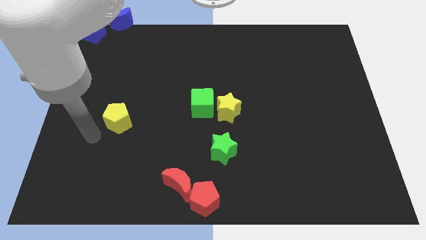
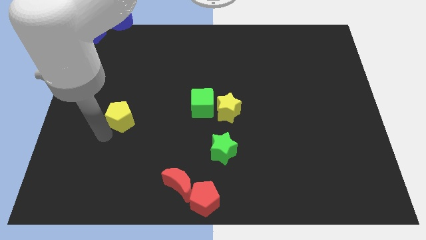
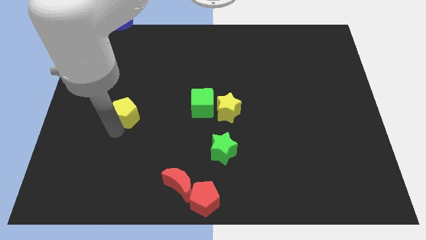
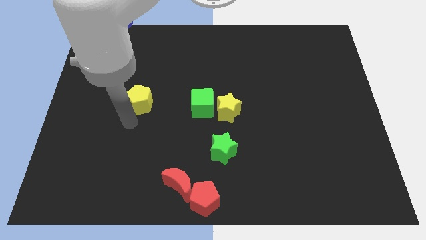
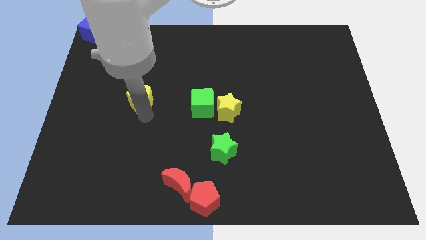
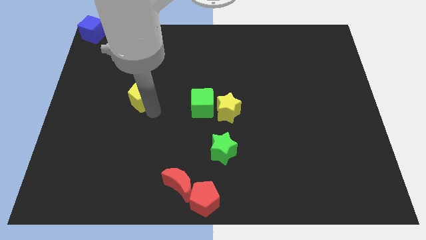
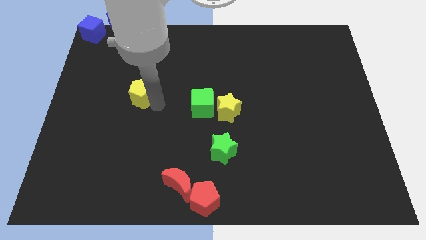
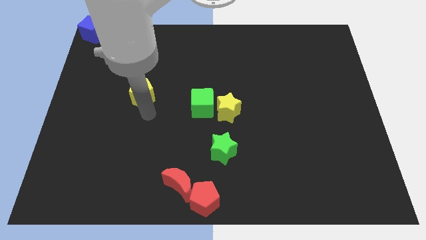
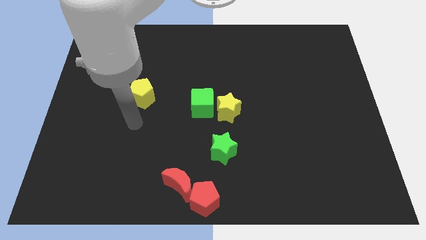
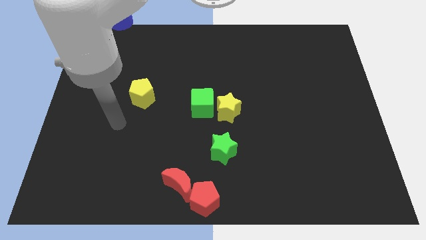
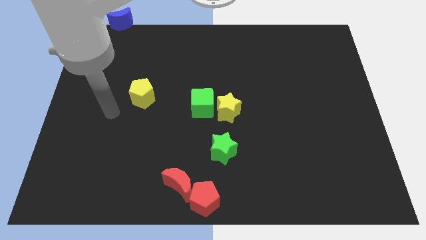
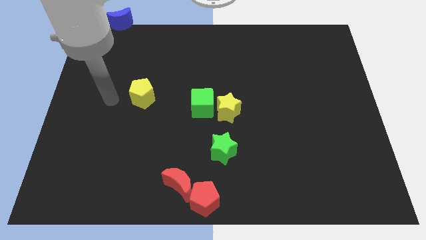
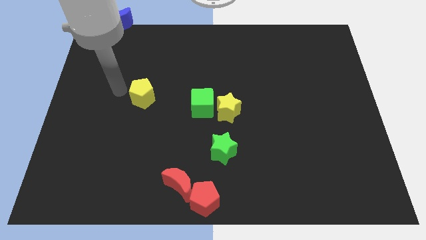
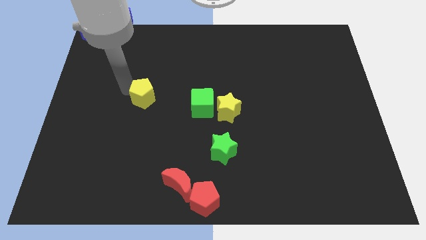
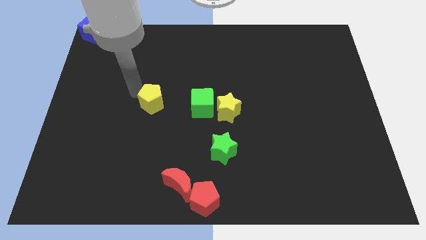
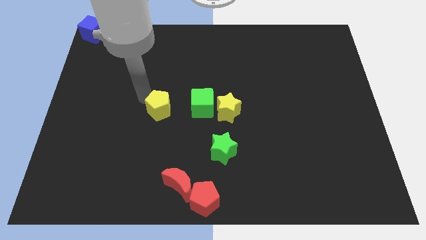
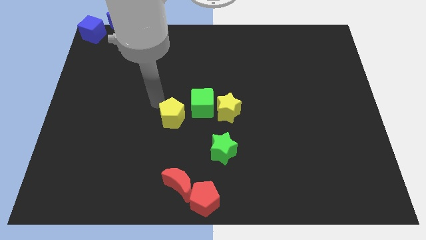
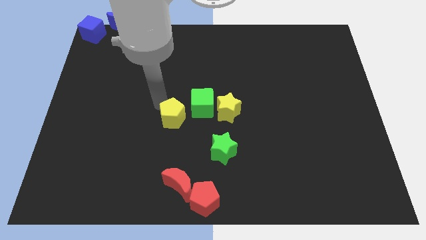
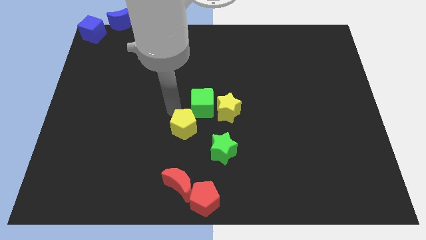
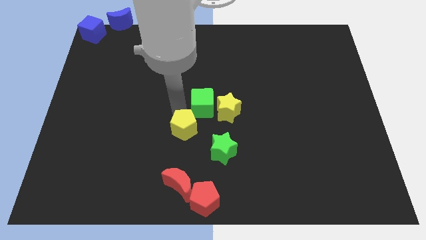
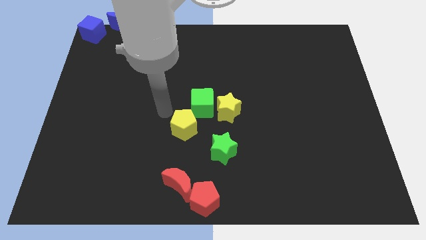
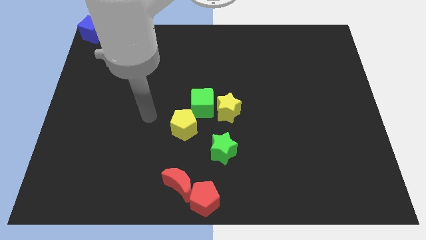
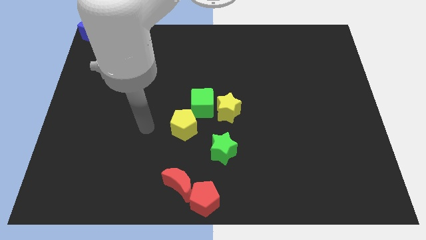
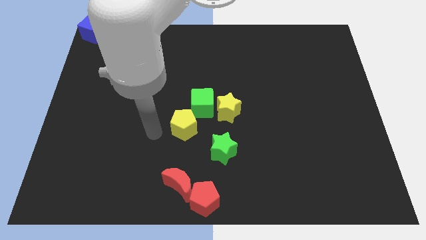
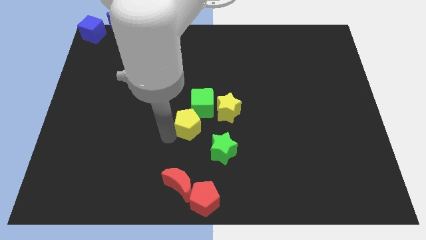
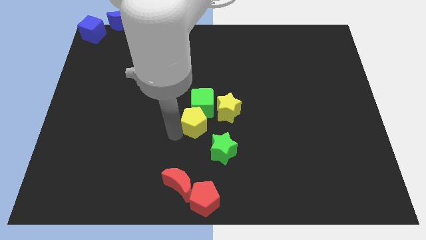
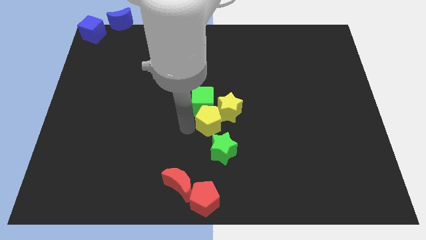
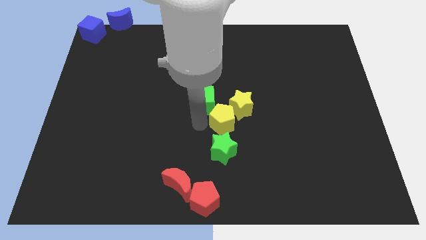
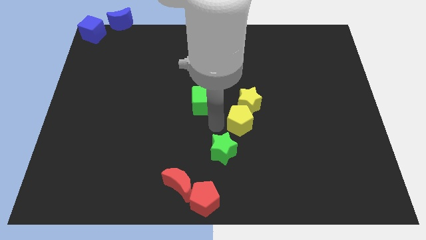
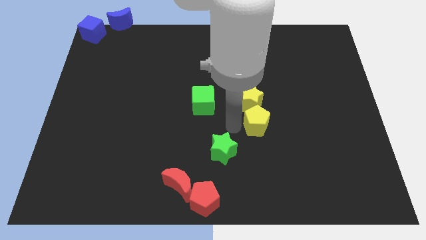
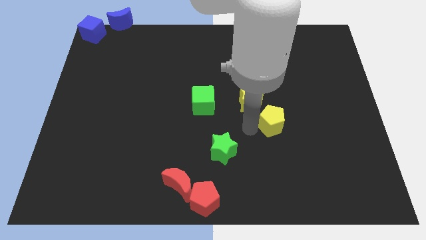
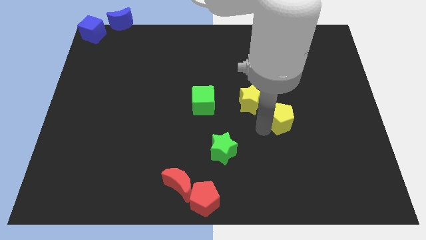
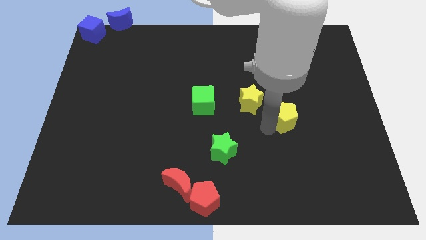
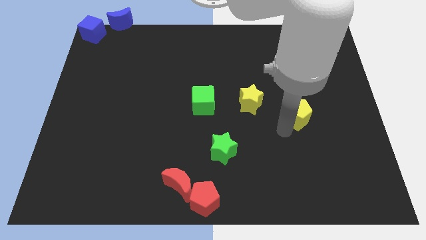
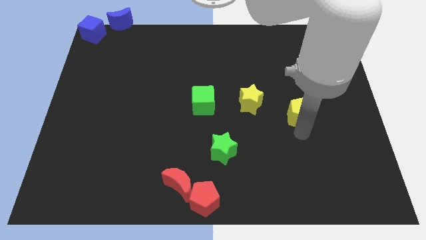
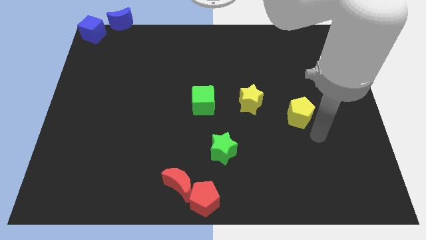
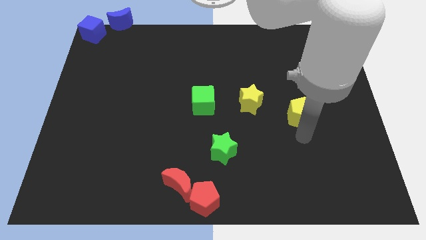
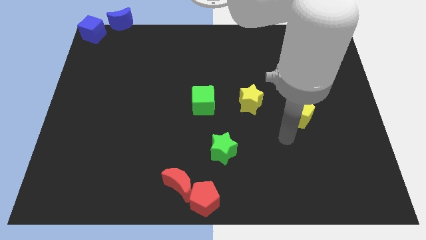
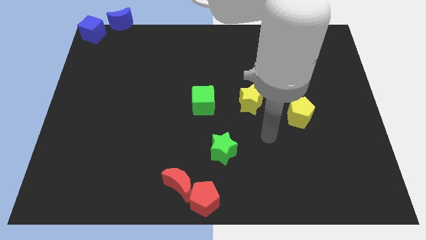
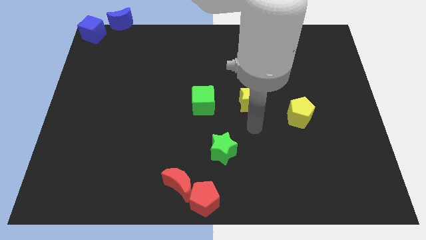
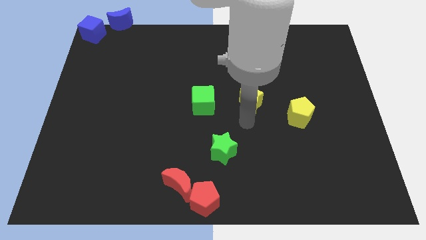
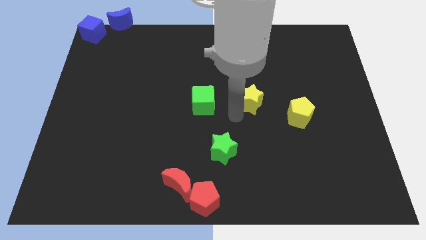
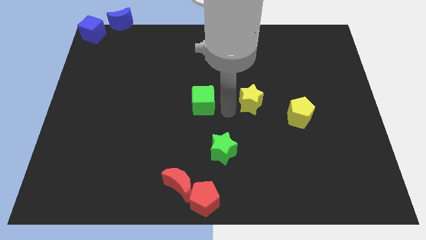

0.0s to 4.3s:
move the yellow pentagon towards the center right

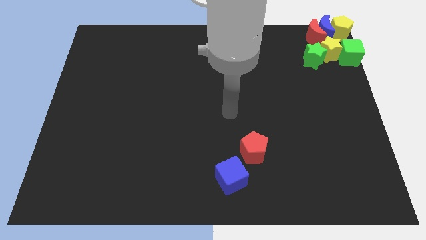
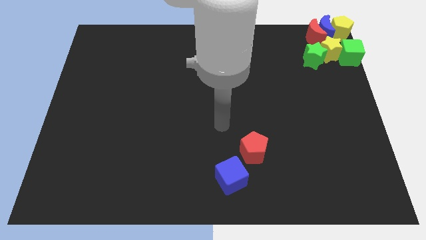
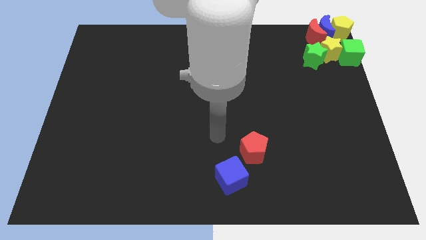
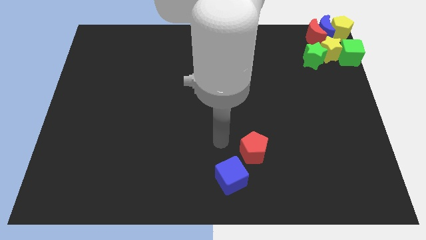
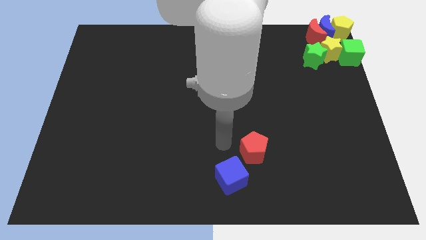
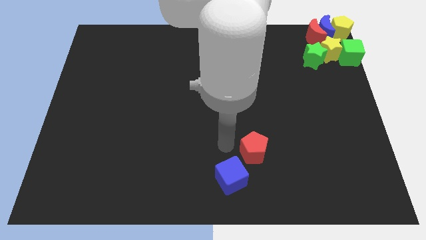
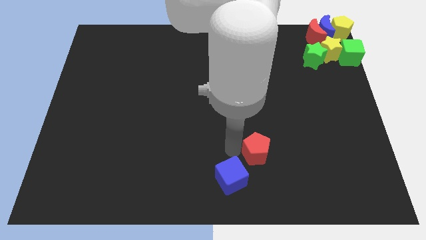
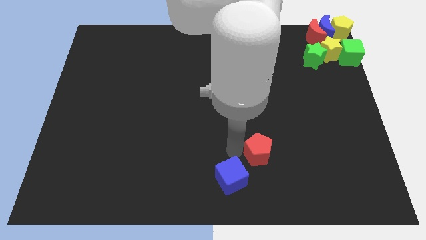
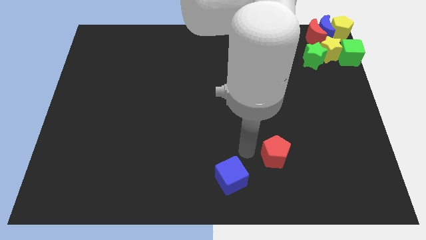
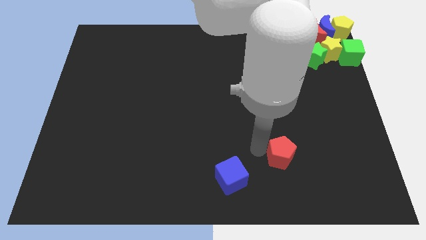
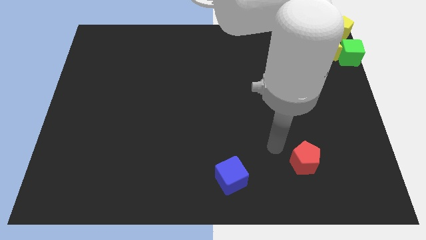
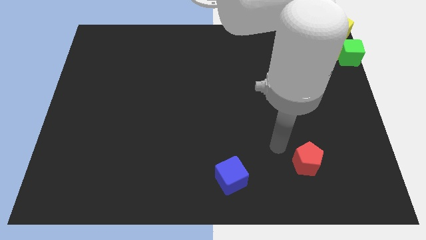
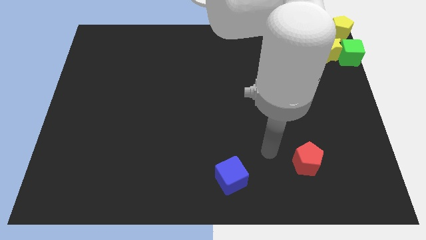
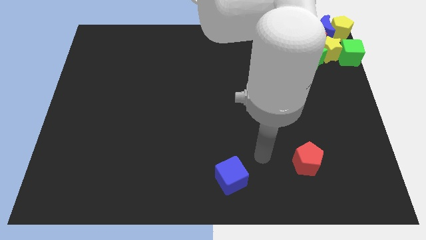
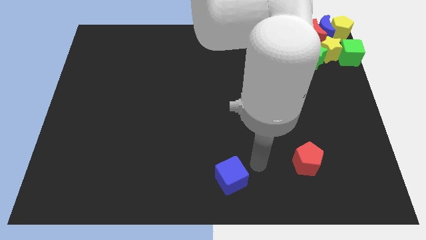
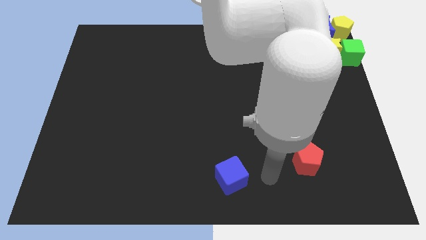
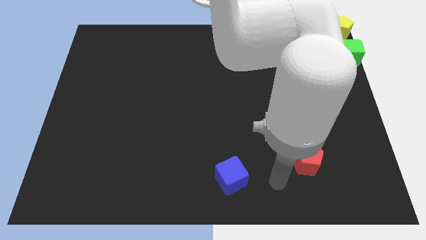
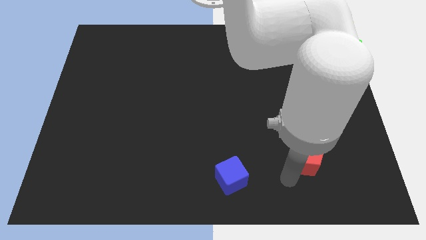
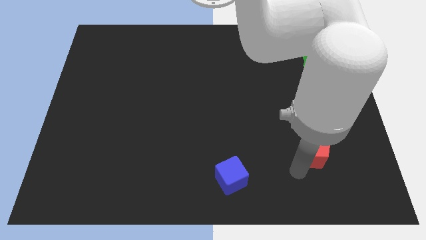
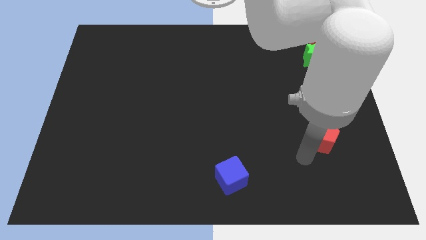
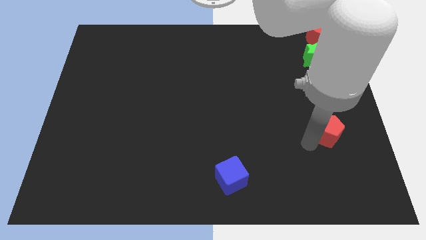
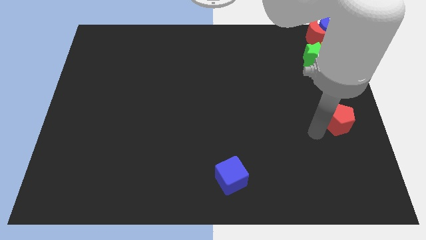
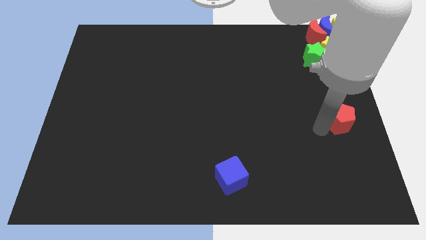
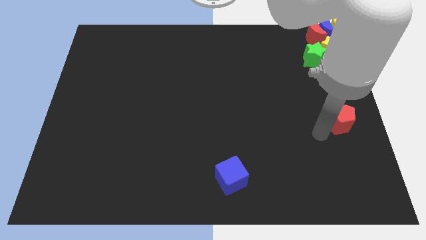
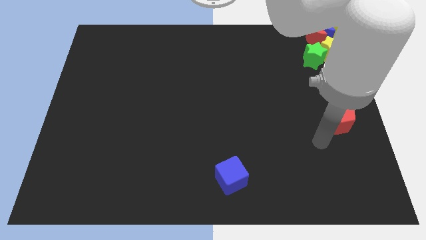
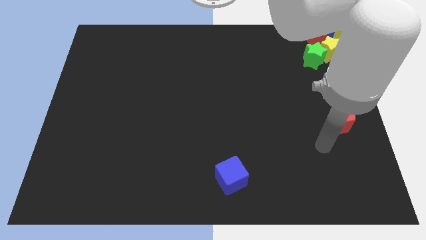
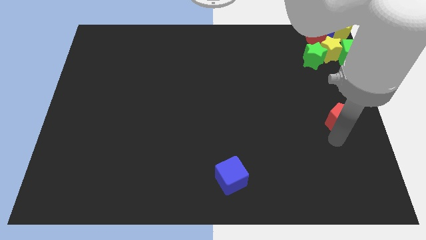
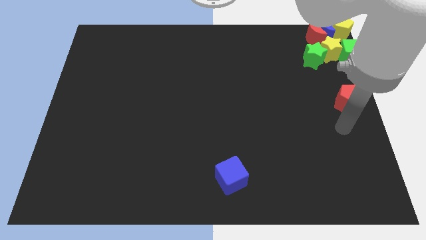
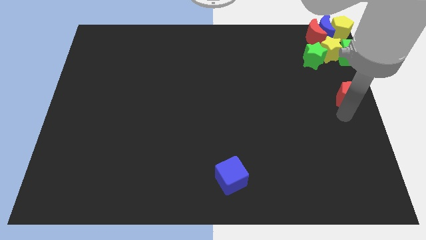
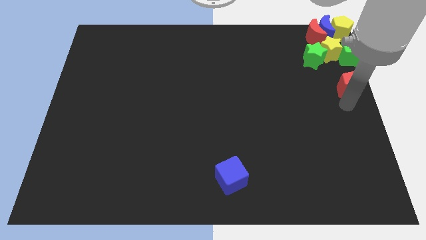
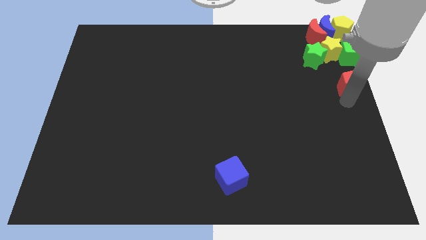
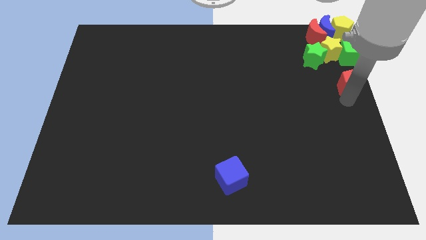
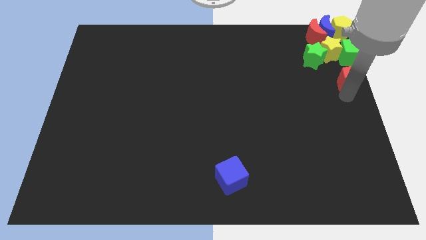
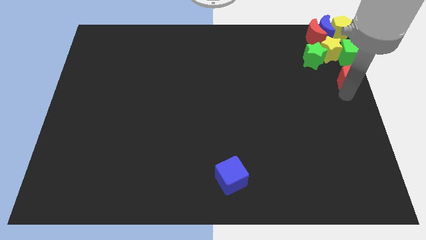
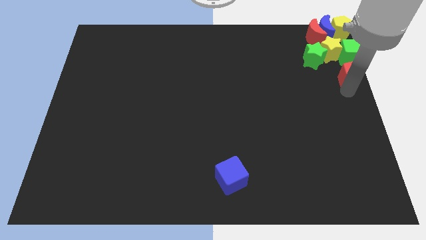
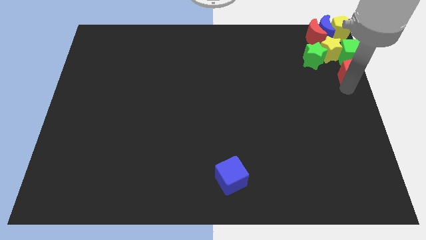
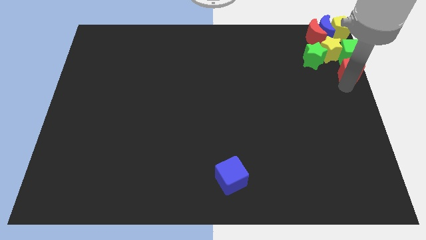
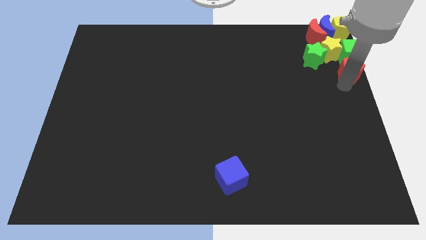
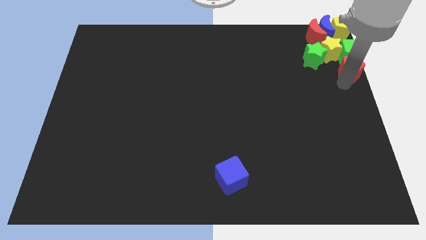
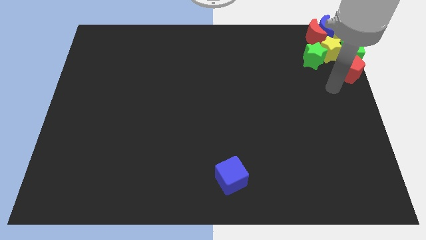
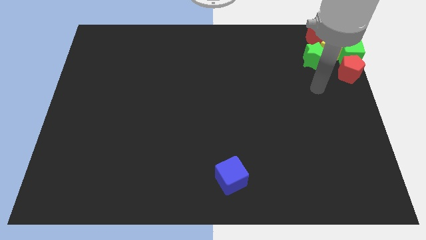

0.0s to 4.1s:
push the red pentagon to the group of blocks

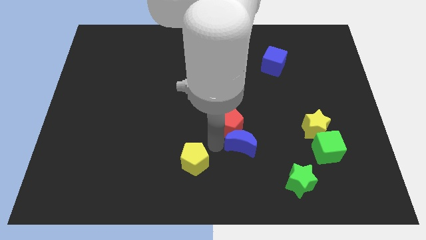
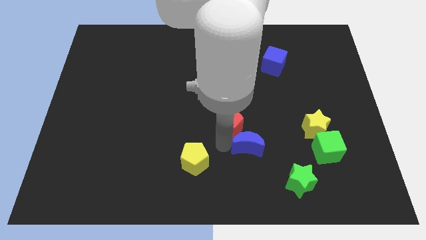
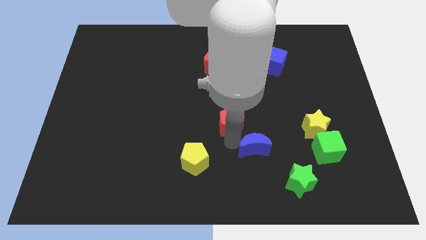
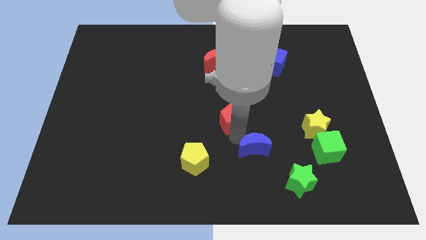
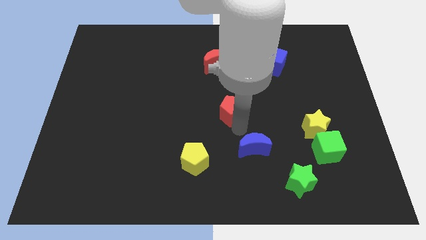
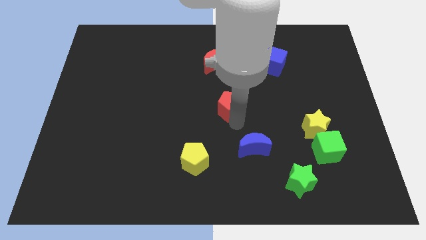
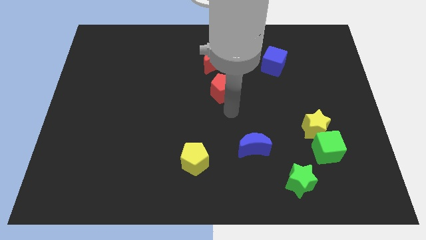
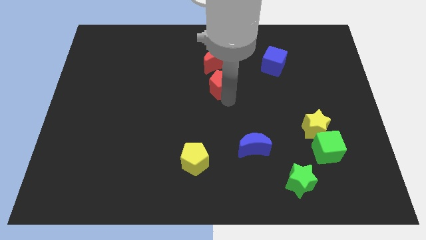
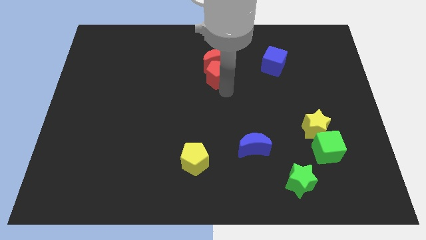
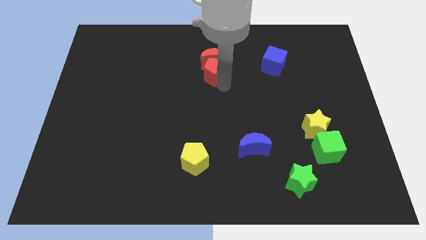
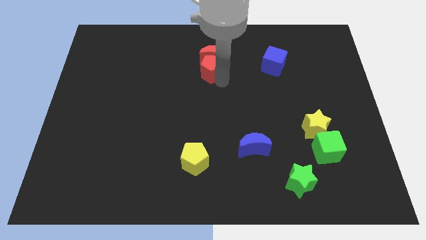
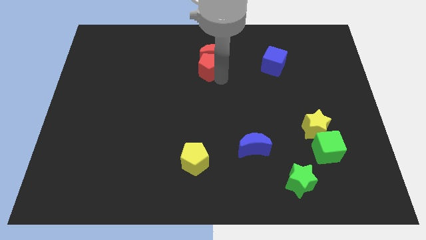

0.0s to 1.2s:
push the red pentagon into the bottom side of the red moon
